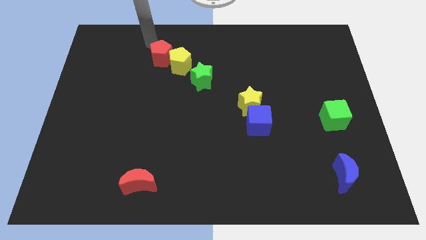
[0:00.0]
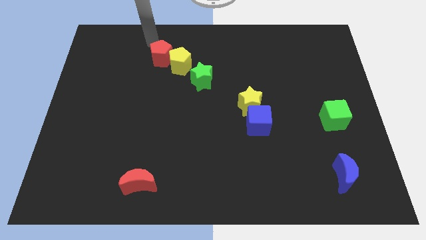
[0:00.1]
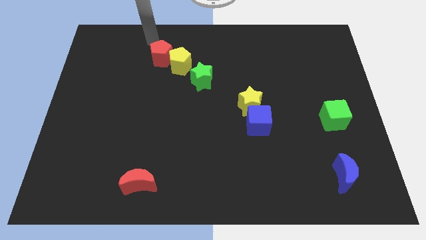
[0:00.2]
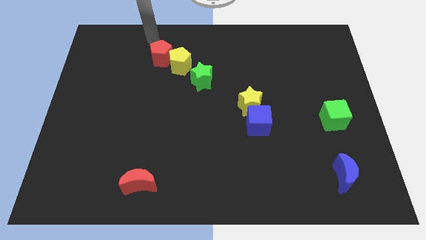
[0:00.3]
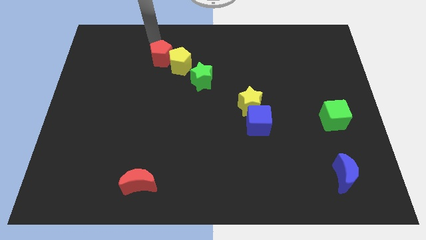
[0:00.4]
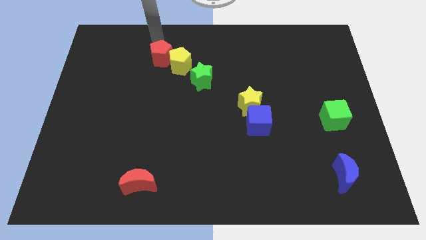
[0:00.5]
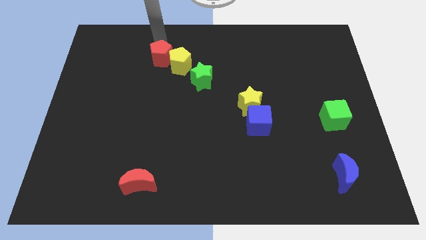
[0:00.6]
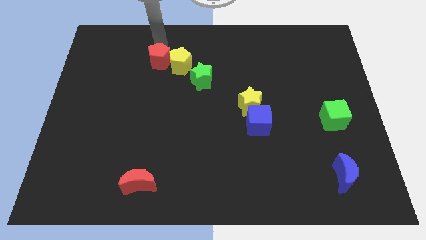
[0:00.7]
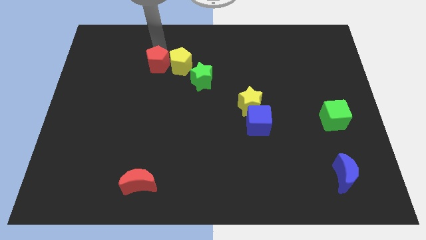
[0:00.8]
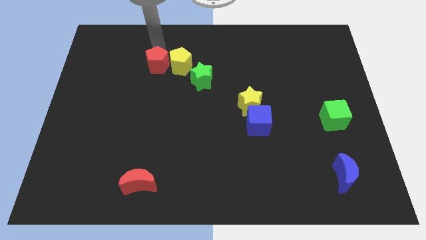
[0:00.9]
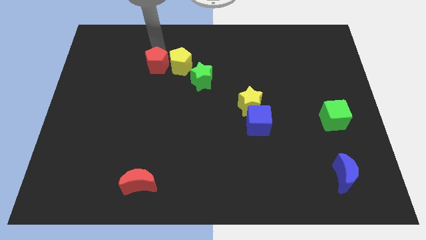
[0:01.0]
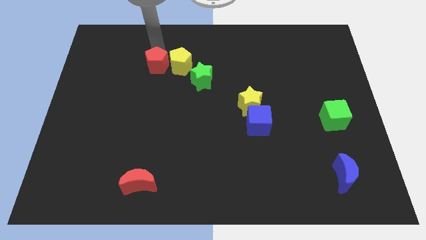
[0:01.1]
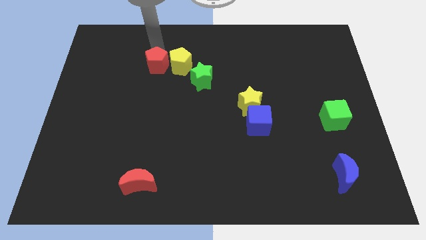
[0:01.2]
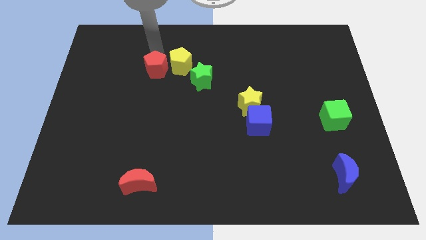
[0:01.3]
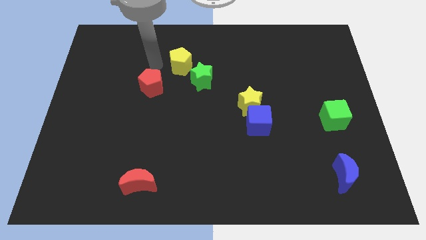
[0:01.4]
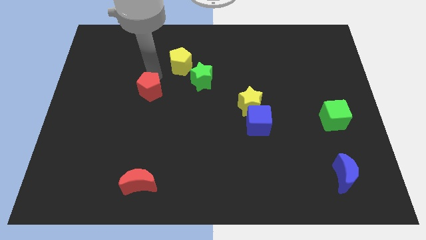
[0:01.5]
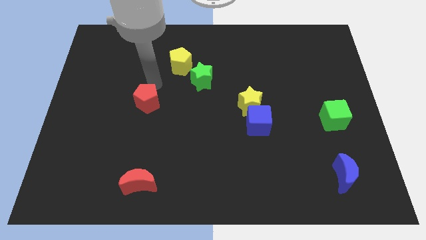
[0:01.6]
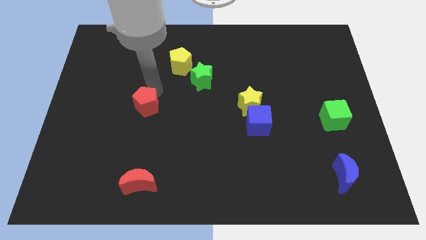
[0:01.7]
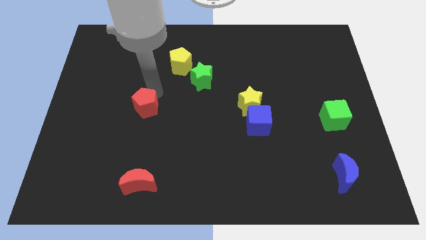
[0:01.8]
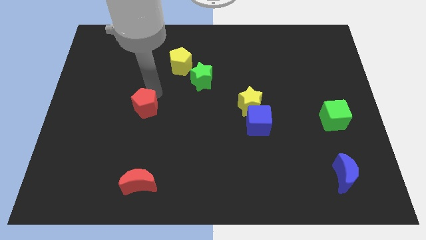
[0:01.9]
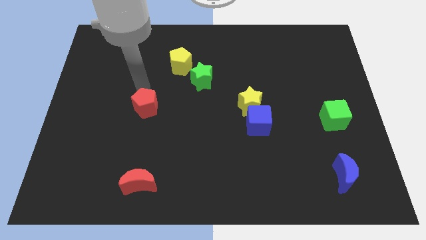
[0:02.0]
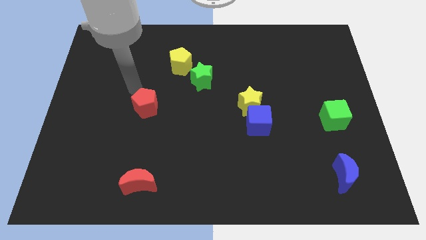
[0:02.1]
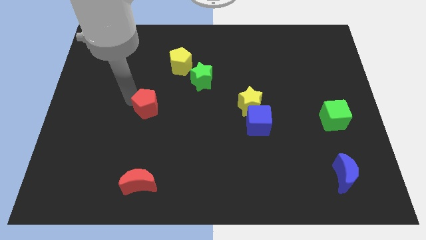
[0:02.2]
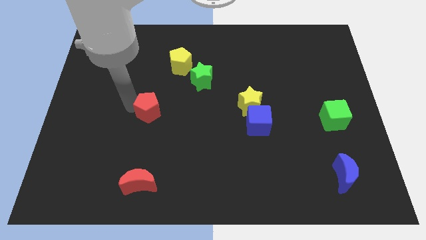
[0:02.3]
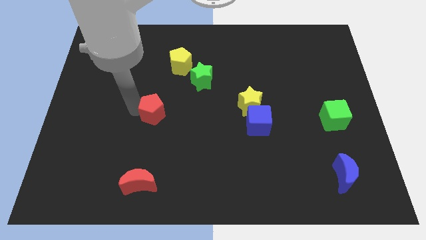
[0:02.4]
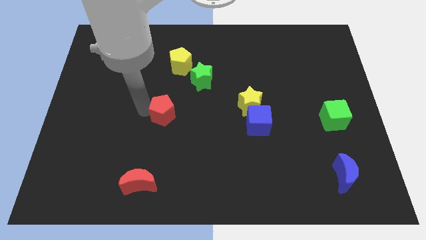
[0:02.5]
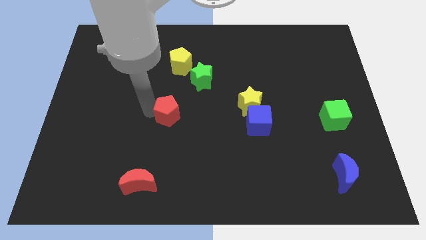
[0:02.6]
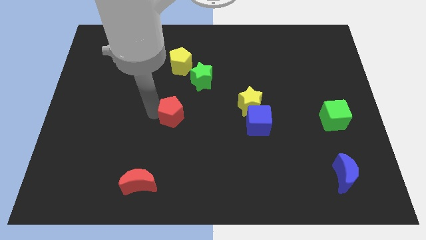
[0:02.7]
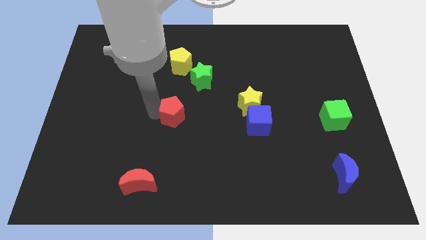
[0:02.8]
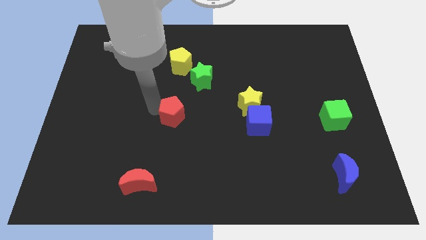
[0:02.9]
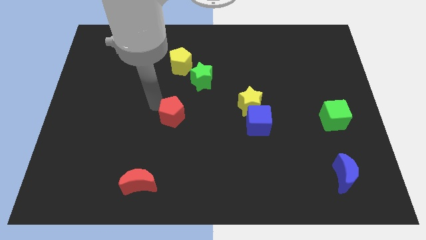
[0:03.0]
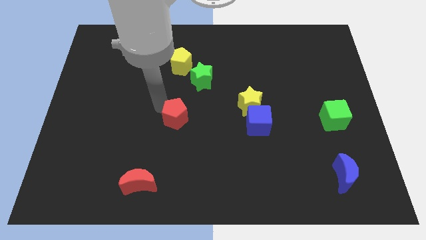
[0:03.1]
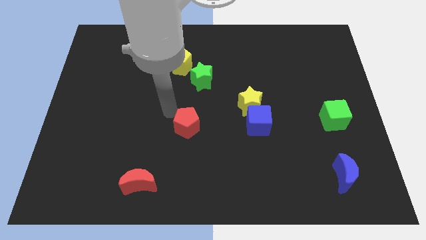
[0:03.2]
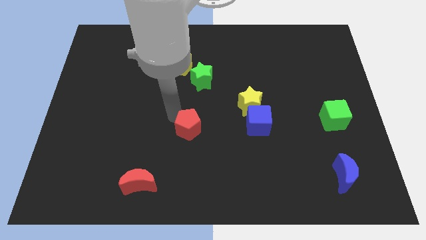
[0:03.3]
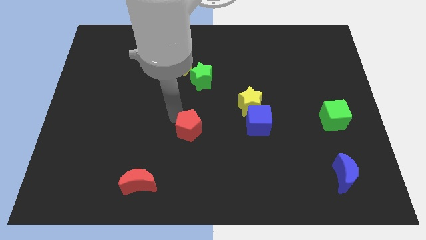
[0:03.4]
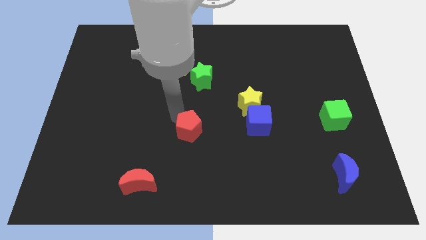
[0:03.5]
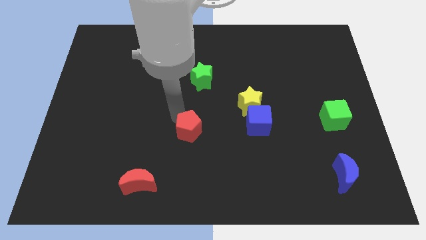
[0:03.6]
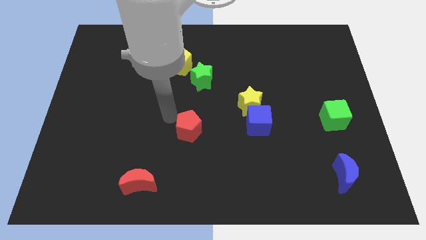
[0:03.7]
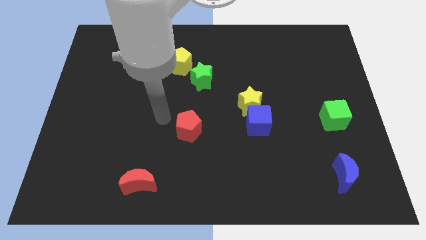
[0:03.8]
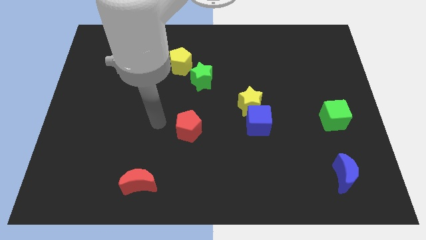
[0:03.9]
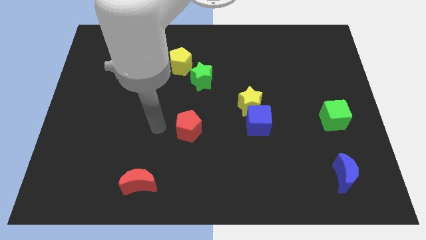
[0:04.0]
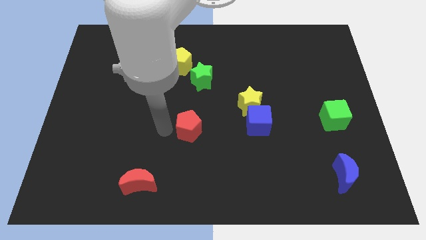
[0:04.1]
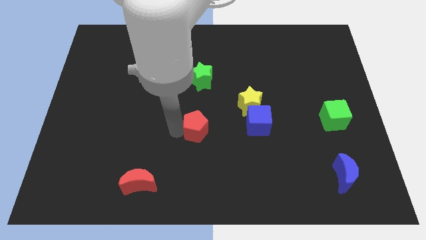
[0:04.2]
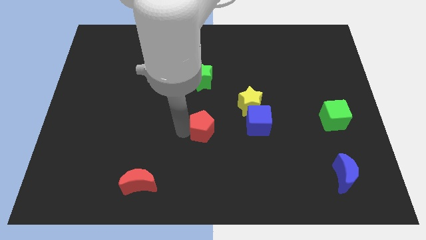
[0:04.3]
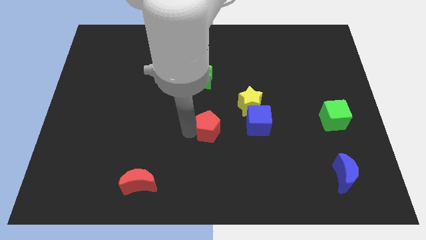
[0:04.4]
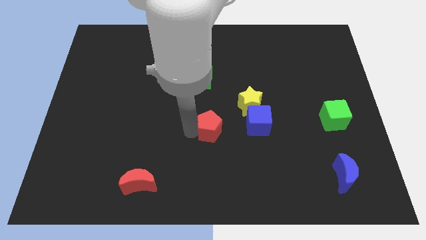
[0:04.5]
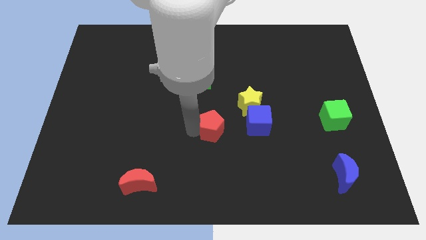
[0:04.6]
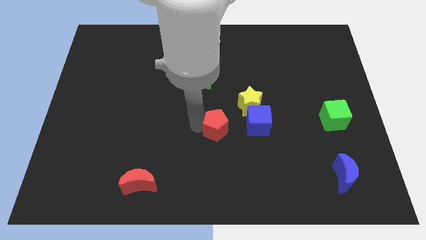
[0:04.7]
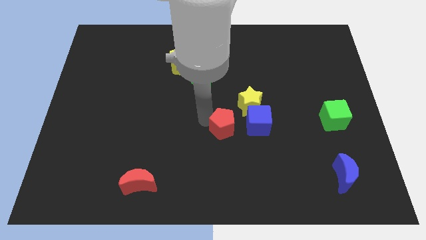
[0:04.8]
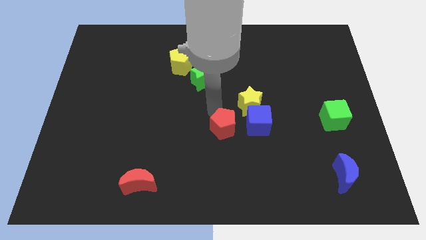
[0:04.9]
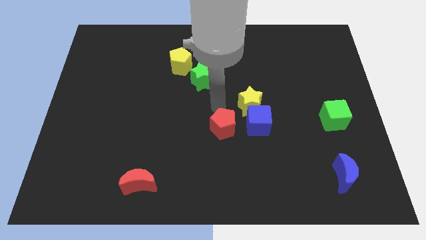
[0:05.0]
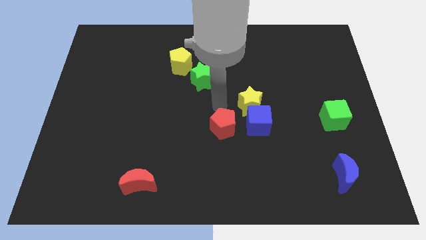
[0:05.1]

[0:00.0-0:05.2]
place the red pentagon to the left side of the blue cube

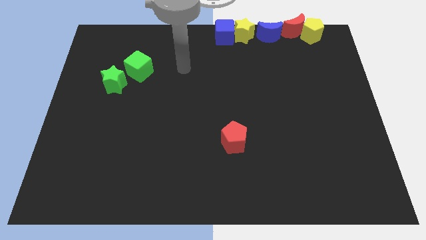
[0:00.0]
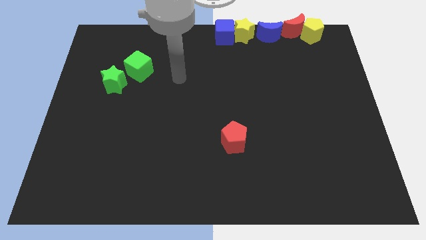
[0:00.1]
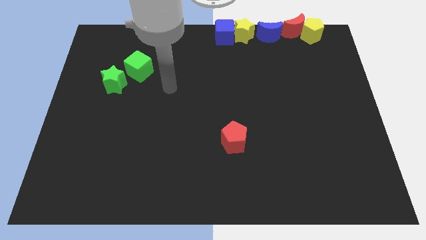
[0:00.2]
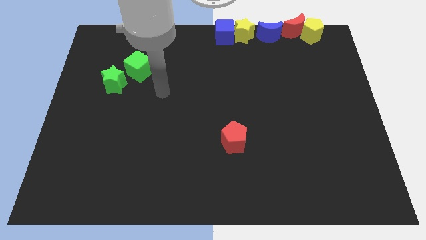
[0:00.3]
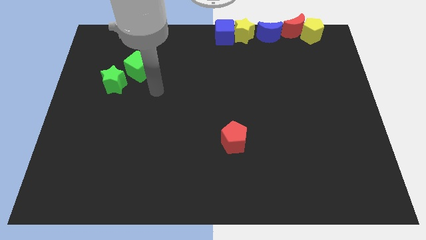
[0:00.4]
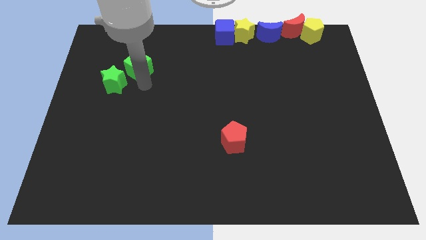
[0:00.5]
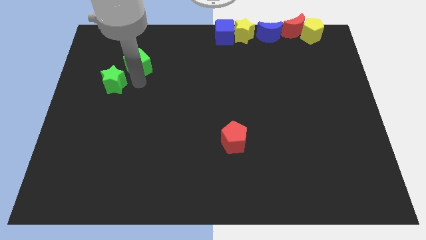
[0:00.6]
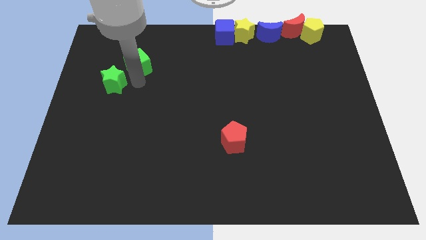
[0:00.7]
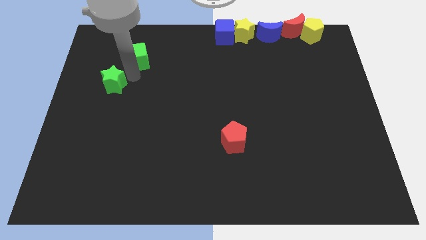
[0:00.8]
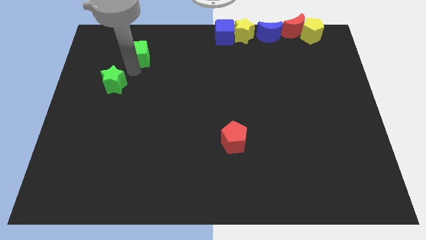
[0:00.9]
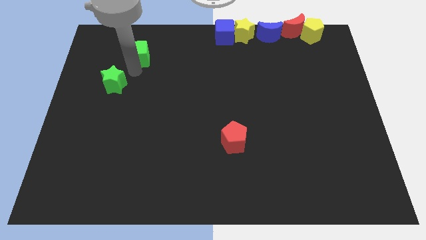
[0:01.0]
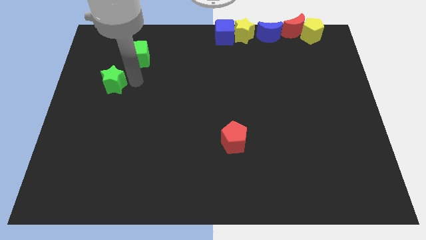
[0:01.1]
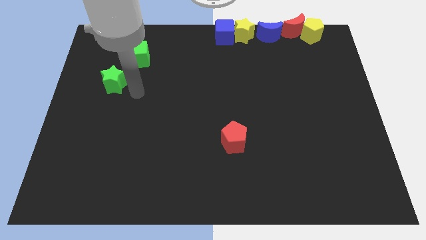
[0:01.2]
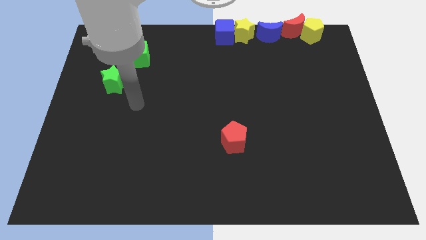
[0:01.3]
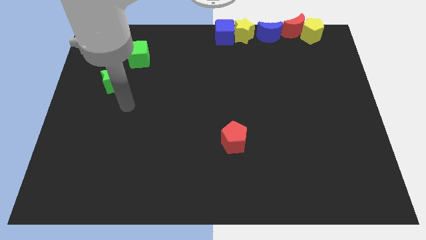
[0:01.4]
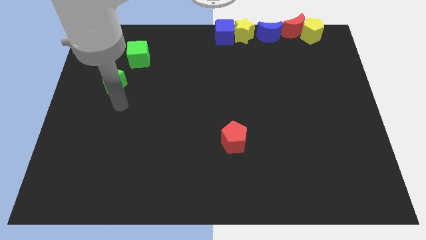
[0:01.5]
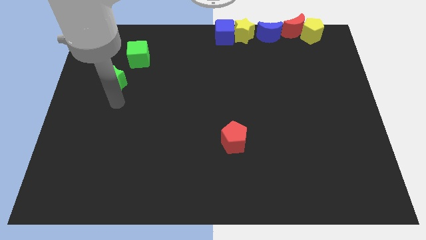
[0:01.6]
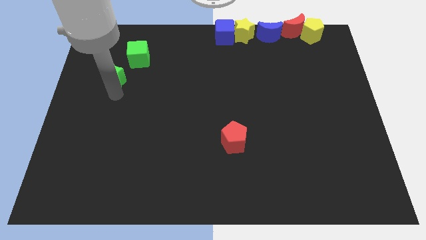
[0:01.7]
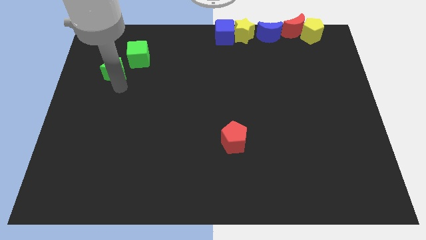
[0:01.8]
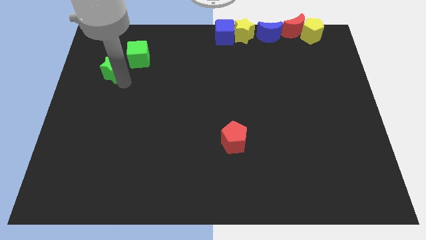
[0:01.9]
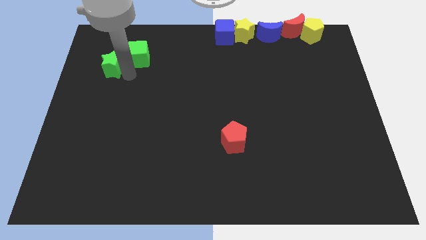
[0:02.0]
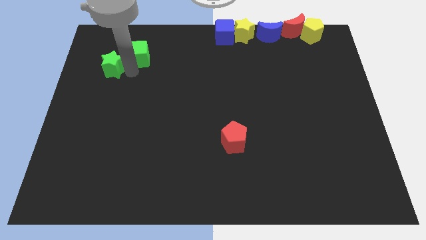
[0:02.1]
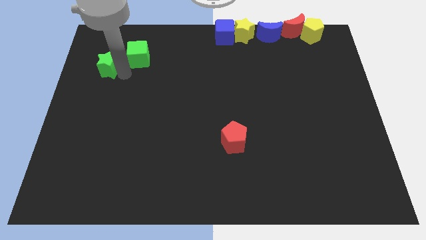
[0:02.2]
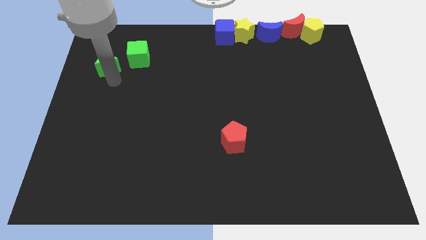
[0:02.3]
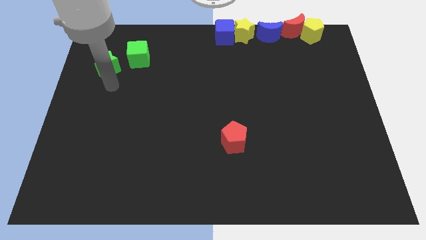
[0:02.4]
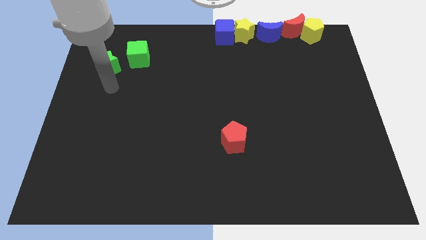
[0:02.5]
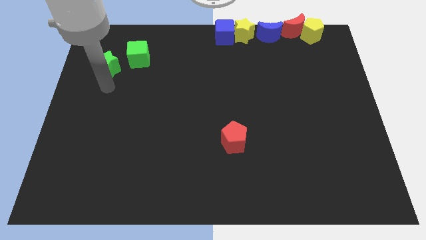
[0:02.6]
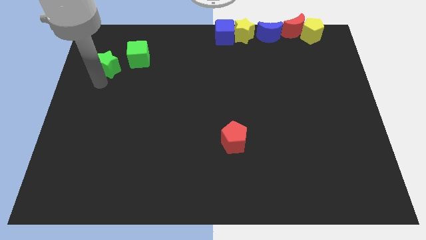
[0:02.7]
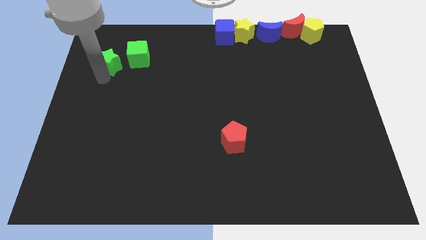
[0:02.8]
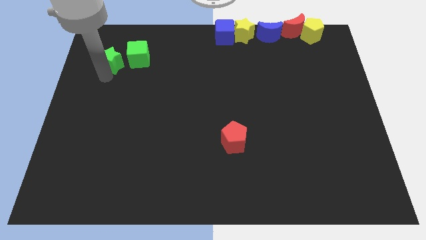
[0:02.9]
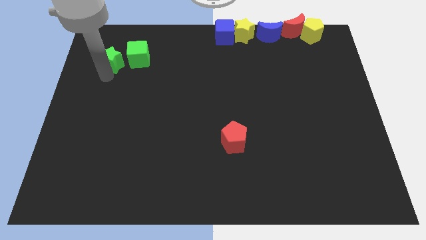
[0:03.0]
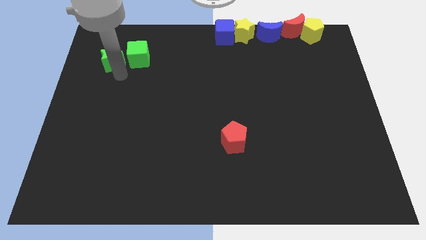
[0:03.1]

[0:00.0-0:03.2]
move green cube and green star to the top left of the board

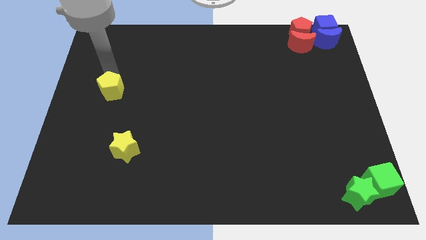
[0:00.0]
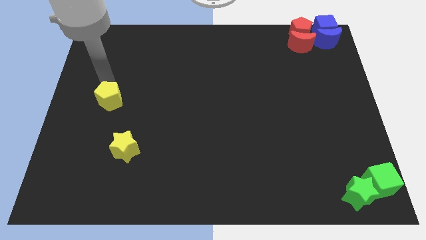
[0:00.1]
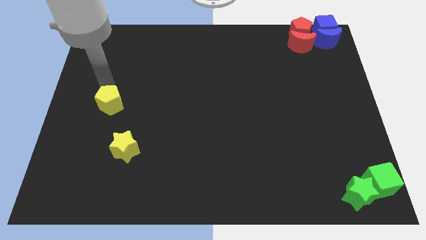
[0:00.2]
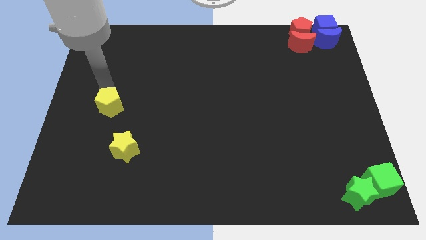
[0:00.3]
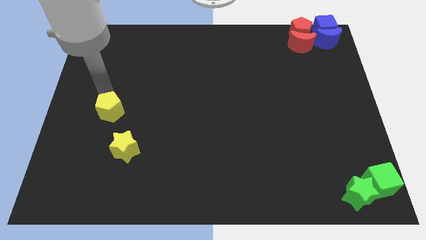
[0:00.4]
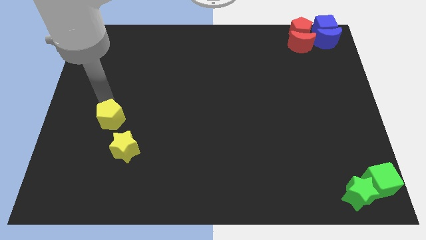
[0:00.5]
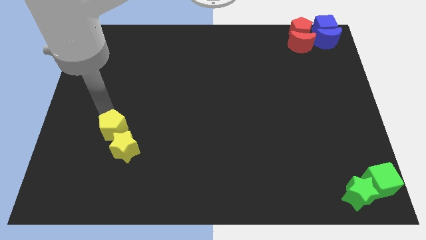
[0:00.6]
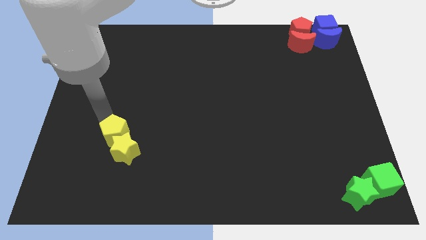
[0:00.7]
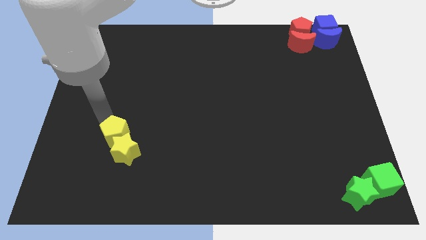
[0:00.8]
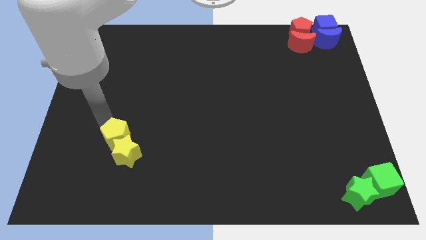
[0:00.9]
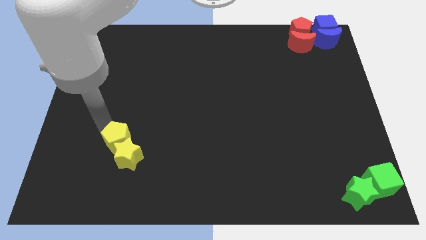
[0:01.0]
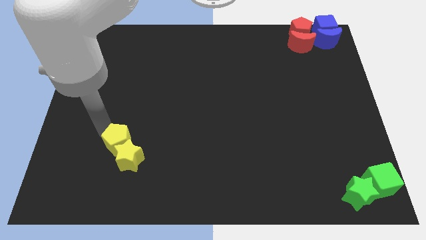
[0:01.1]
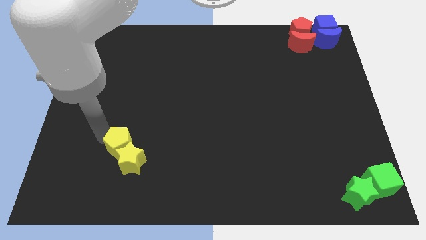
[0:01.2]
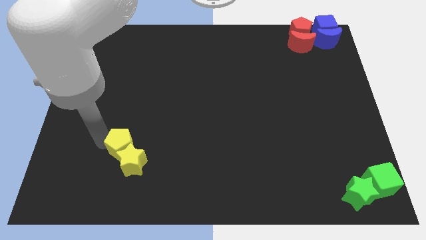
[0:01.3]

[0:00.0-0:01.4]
push yellow pentagon into green star
